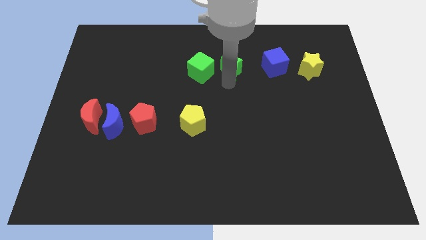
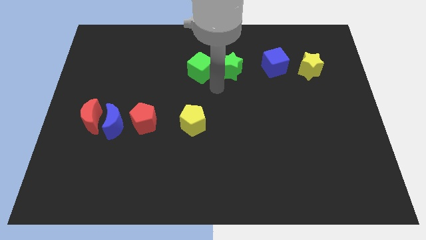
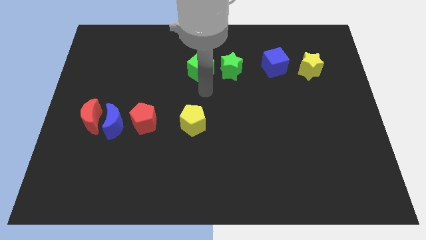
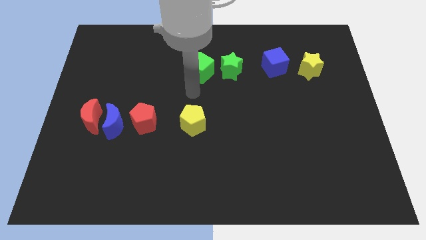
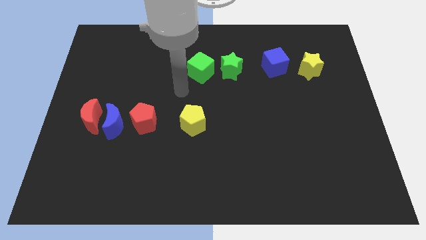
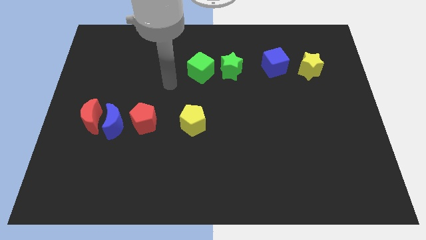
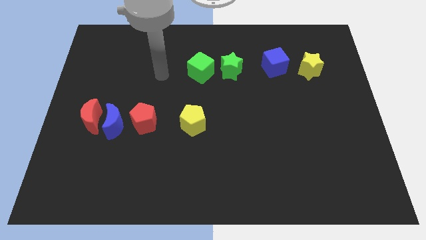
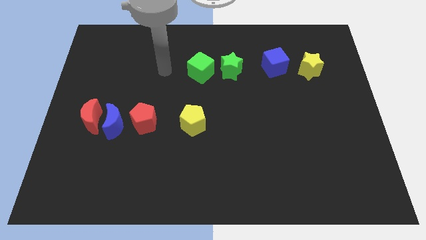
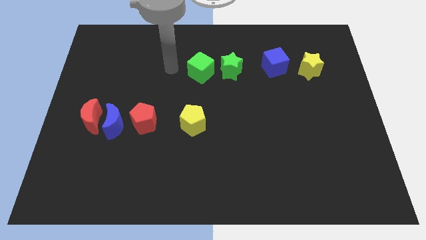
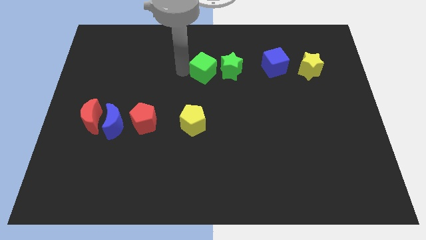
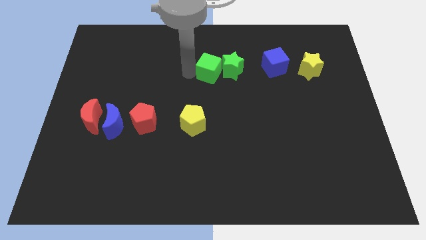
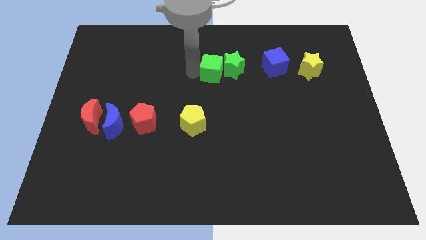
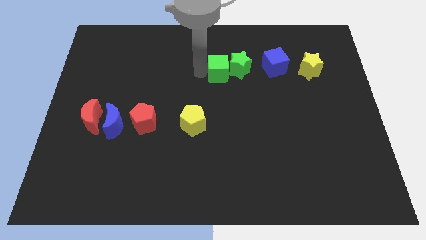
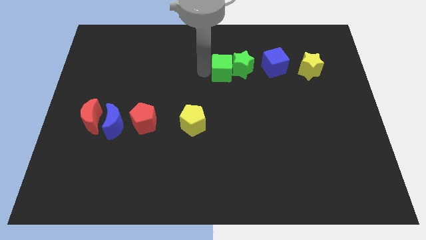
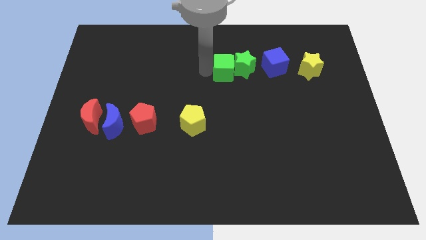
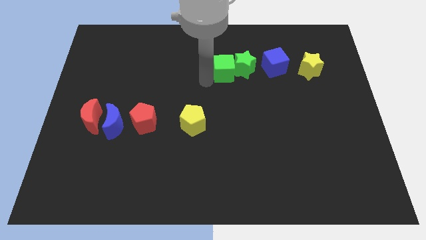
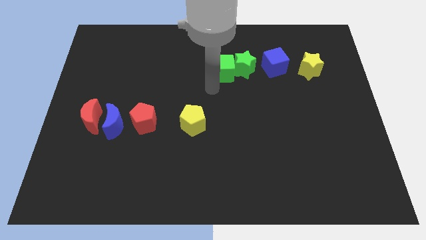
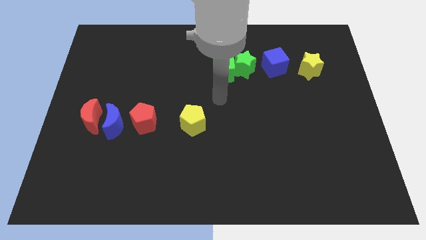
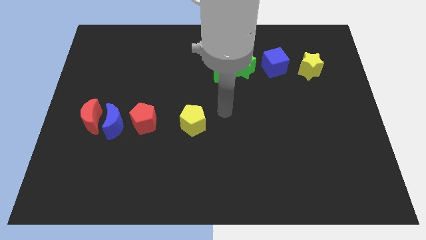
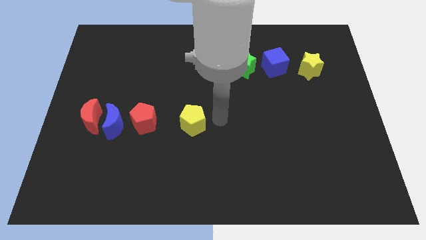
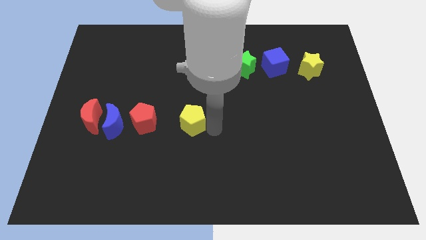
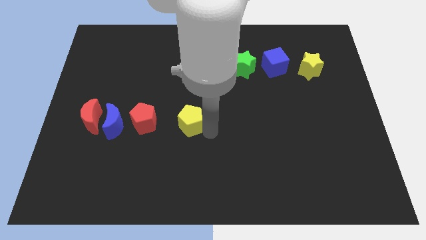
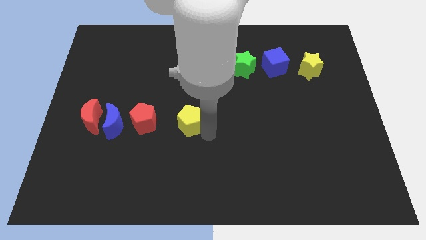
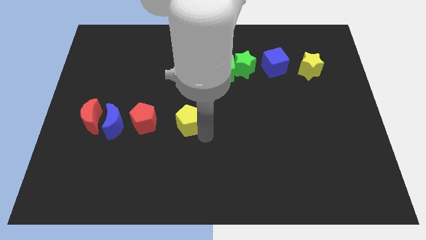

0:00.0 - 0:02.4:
move green cube into green star

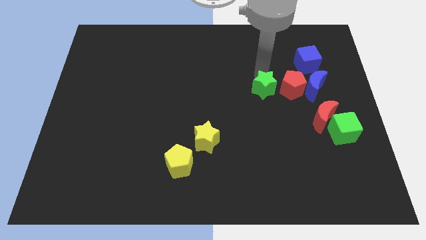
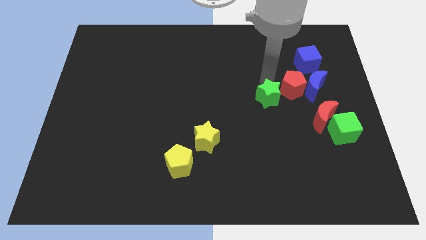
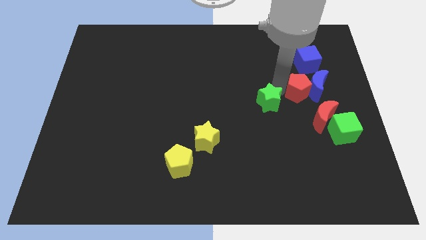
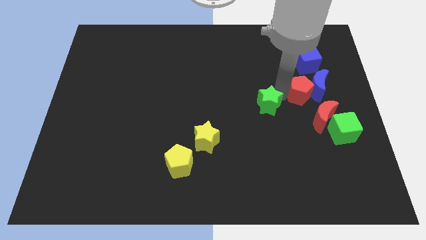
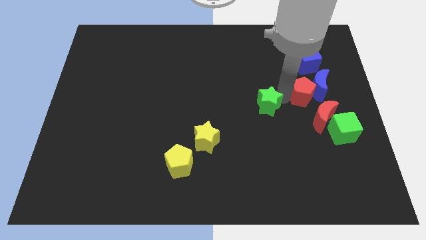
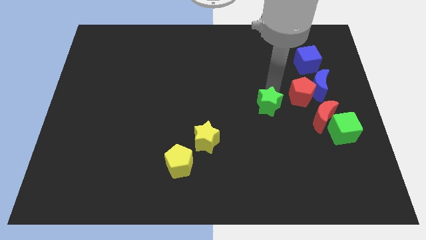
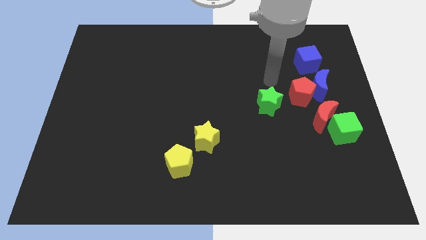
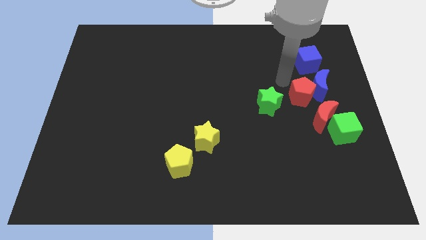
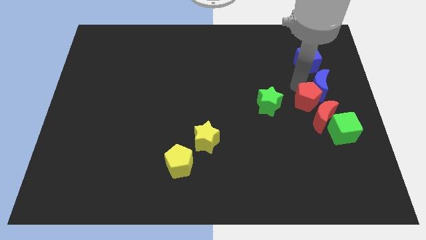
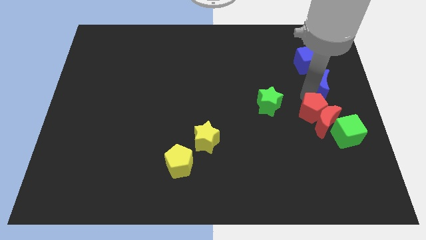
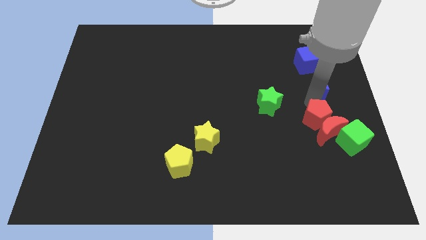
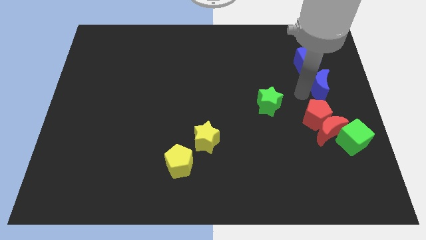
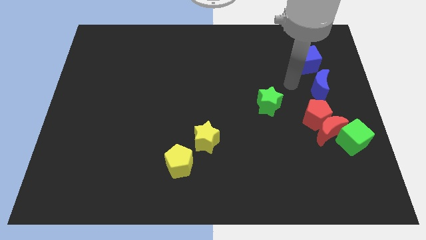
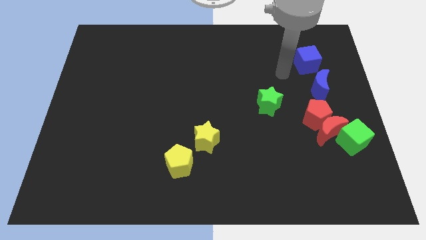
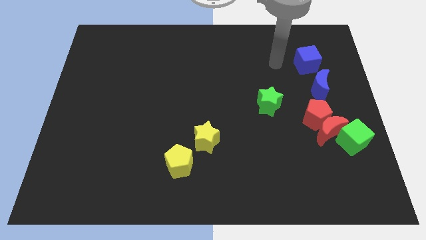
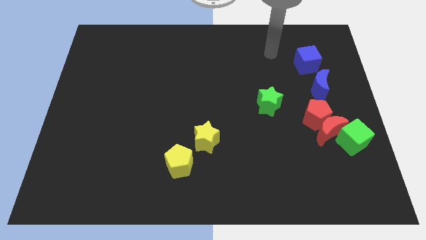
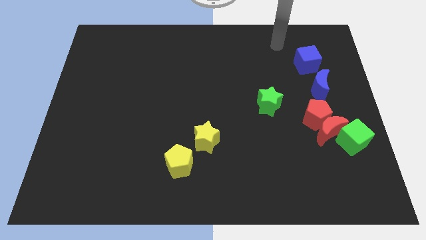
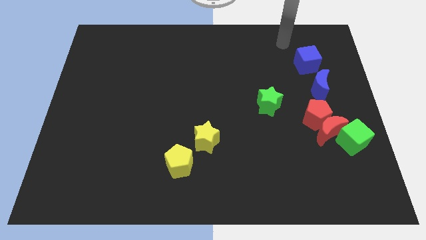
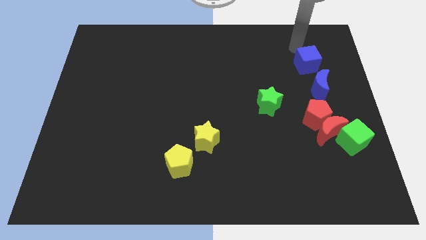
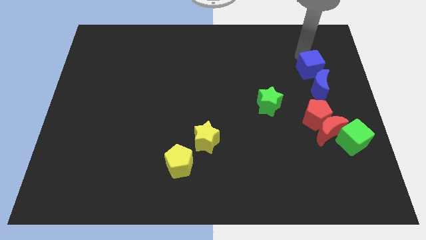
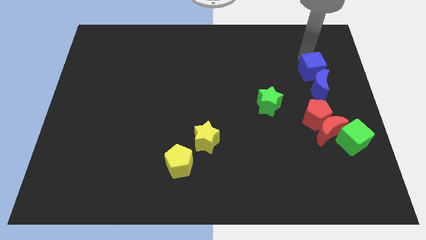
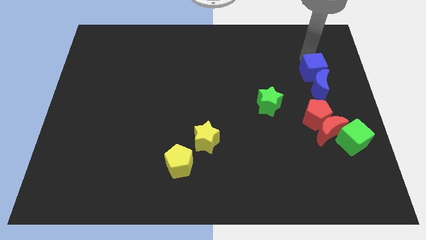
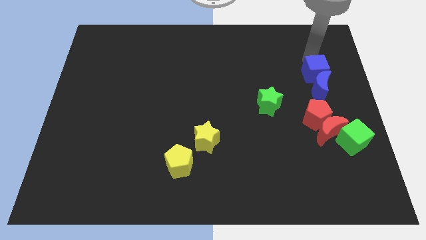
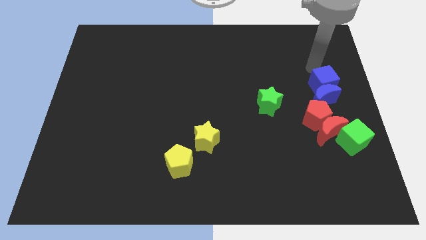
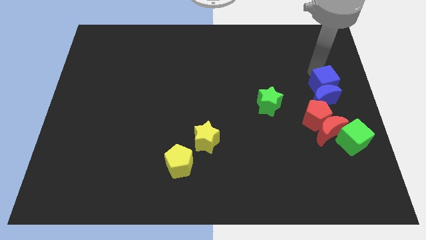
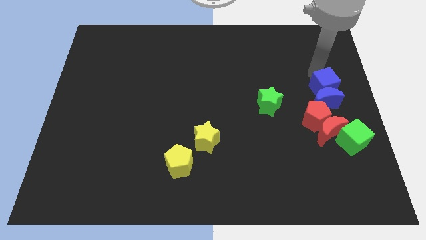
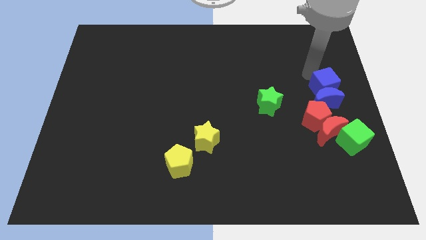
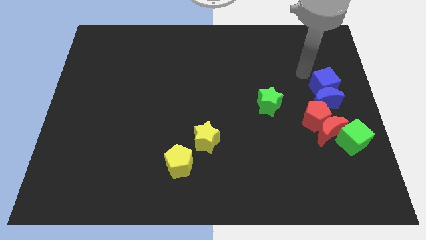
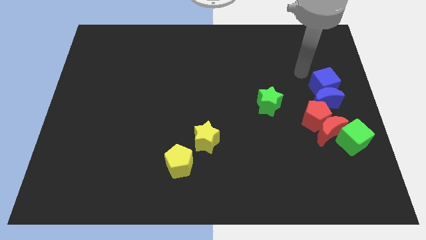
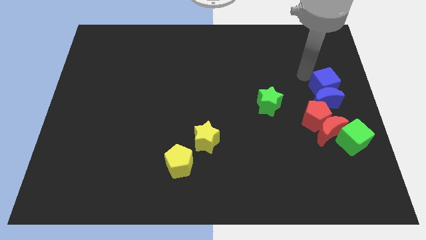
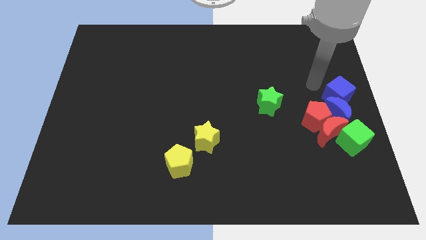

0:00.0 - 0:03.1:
put red and blue blocks together

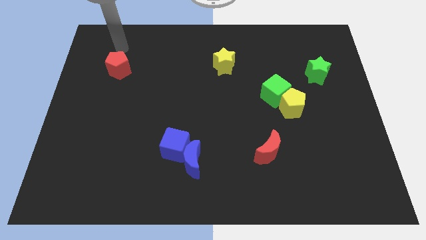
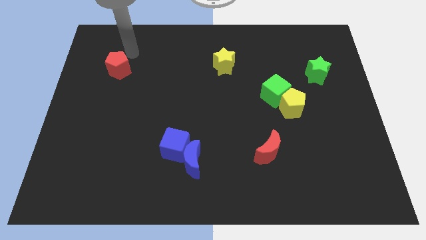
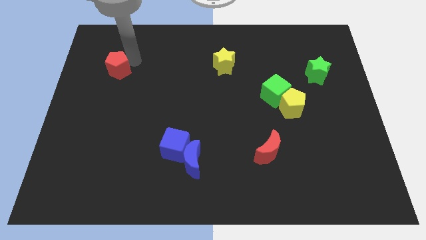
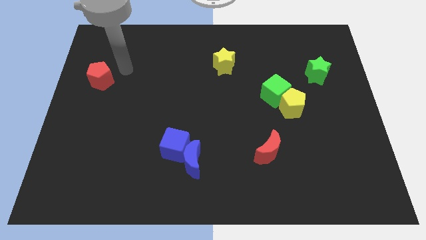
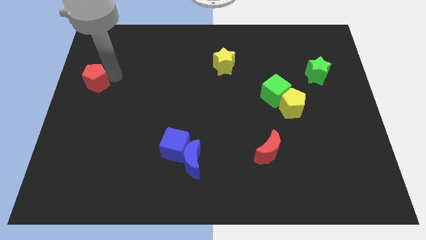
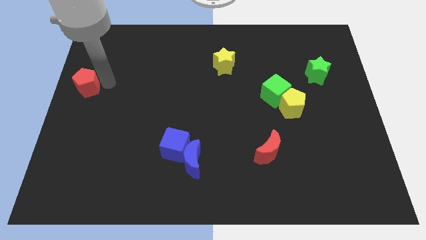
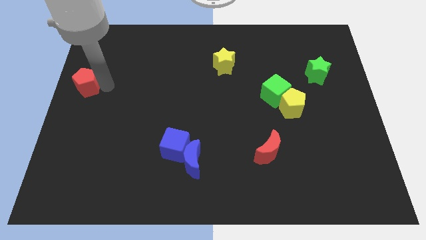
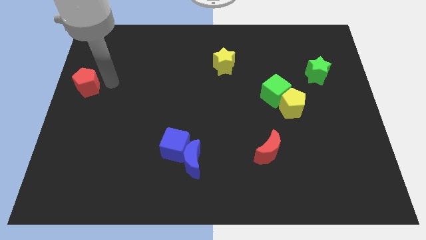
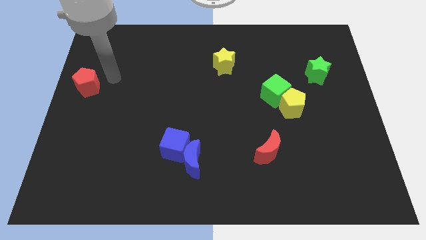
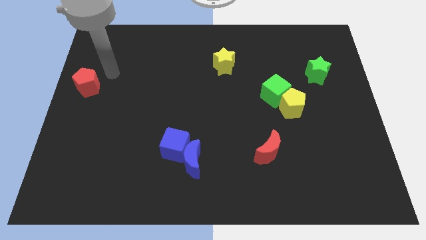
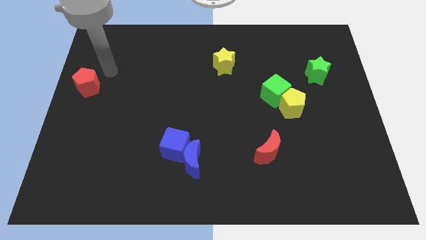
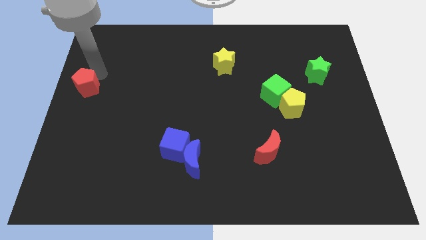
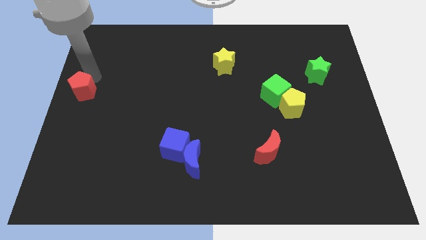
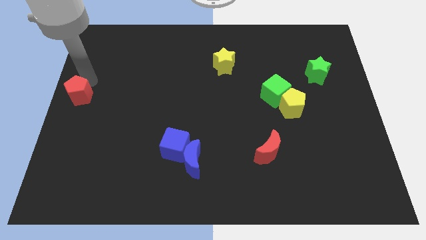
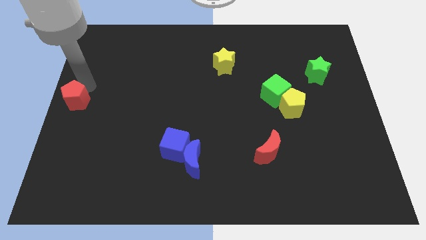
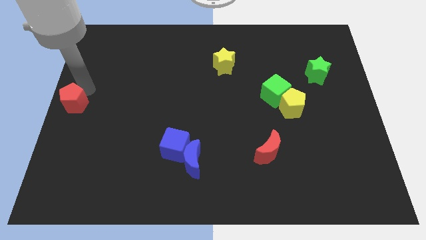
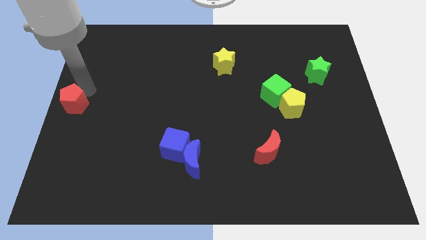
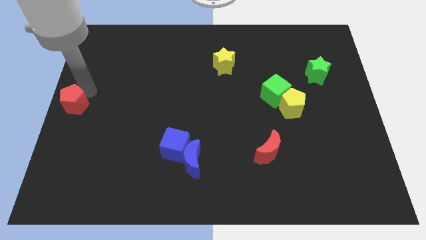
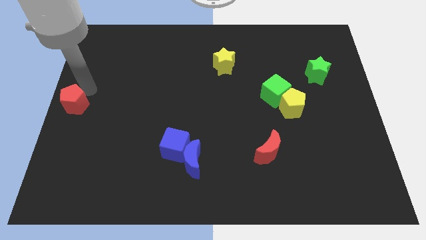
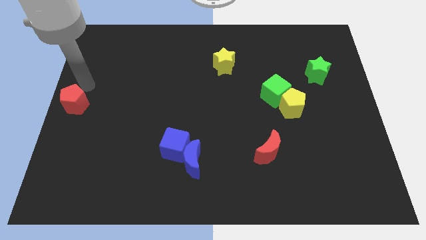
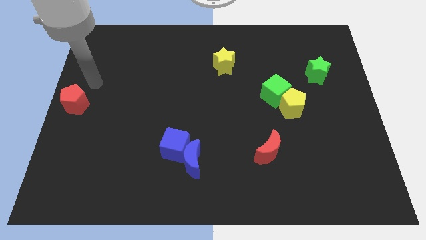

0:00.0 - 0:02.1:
push the red pentagon to the left centre of the board

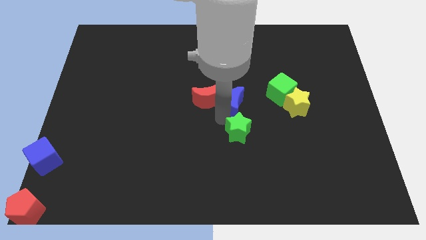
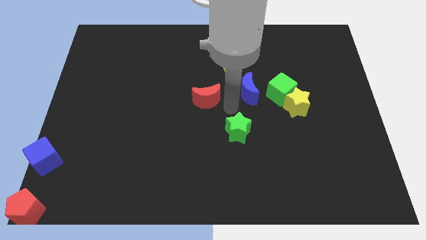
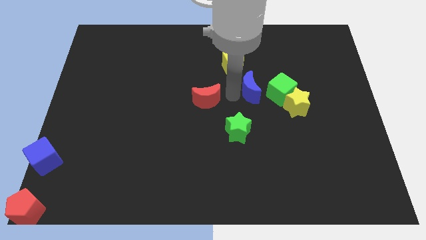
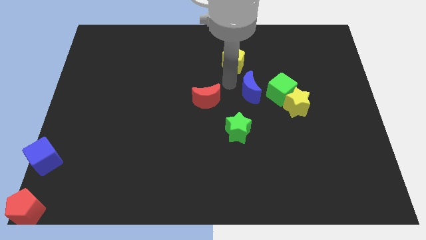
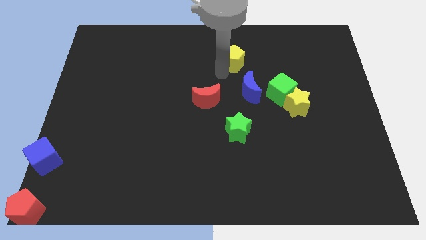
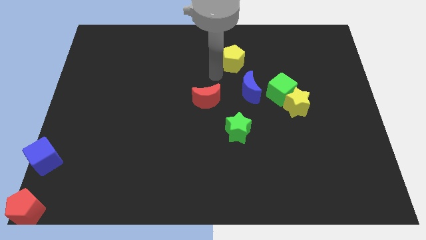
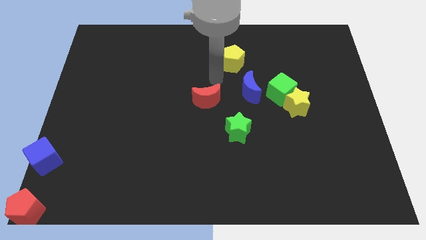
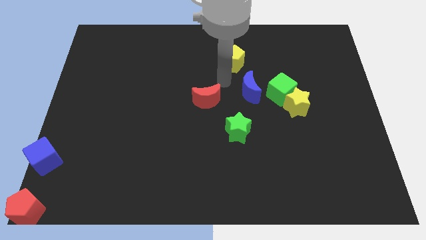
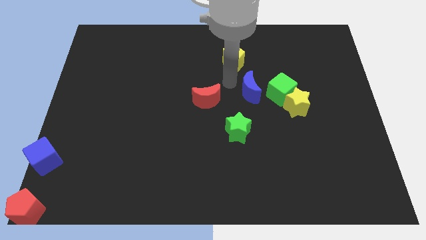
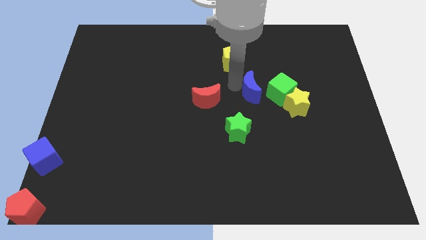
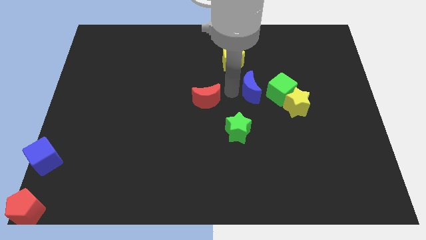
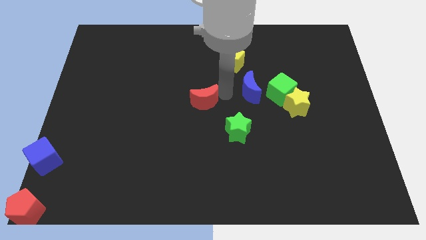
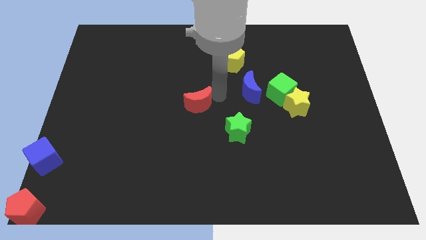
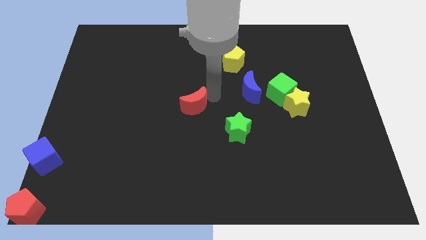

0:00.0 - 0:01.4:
push the red crescent towards the left of the board
